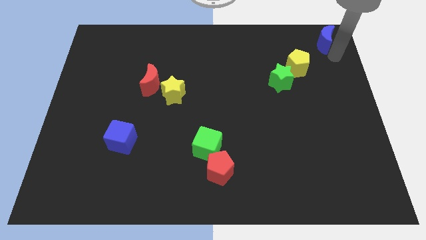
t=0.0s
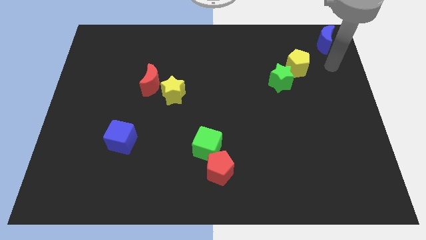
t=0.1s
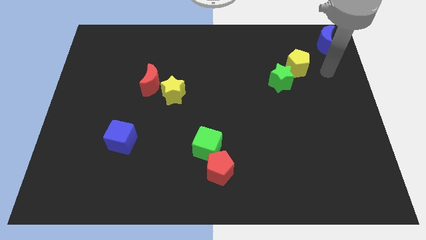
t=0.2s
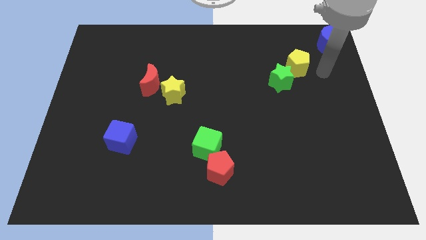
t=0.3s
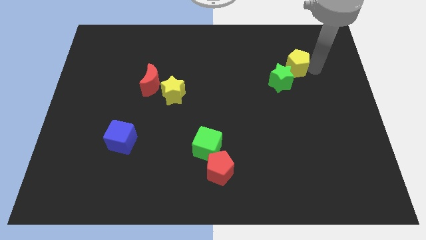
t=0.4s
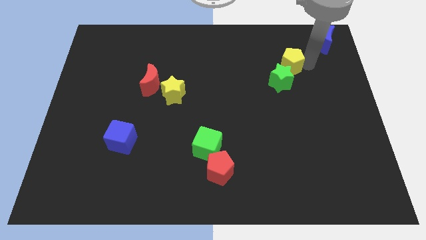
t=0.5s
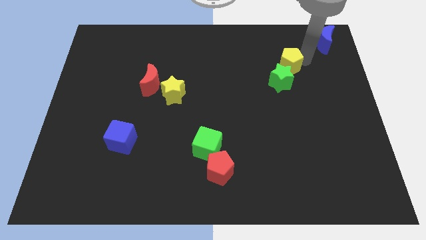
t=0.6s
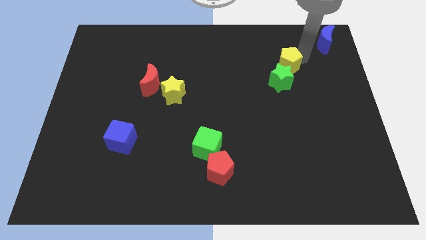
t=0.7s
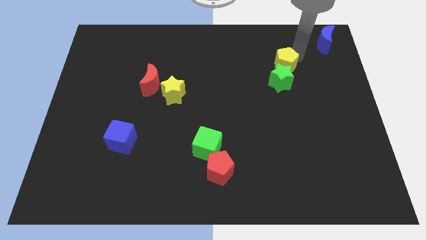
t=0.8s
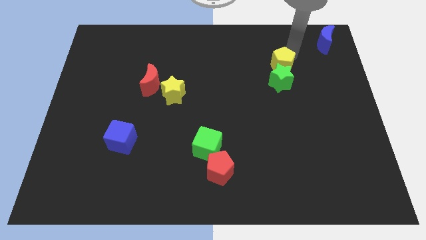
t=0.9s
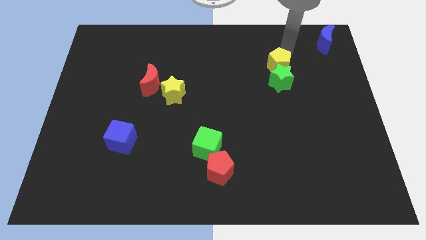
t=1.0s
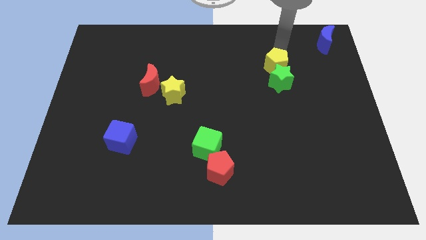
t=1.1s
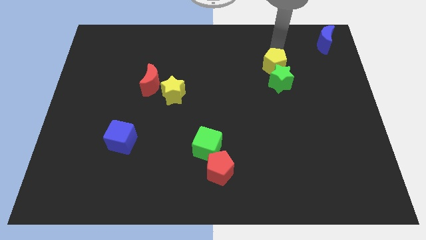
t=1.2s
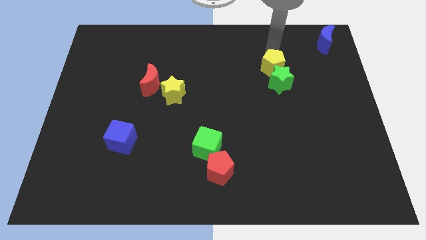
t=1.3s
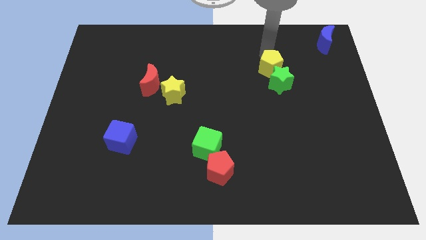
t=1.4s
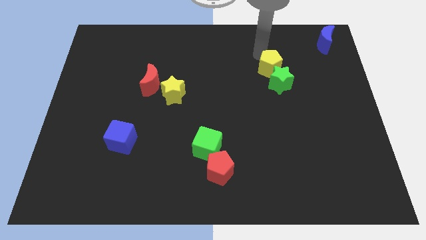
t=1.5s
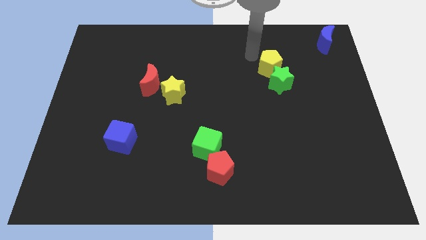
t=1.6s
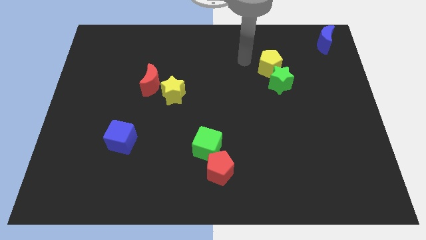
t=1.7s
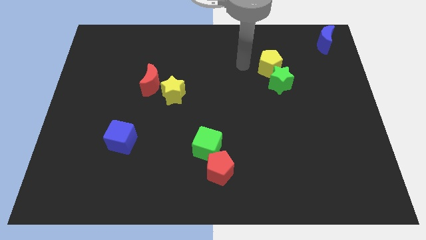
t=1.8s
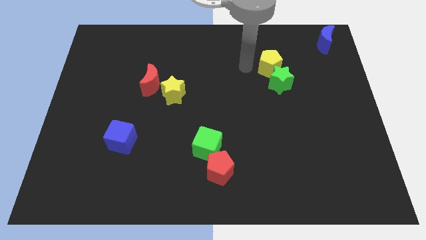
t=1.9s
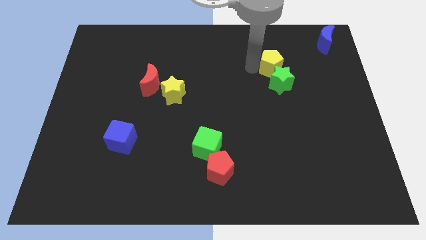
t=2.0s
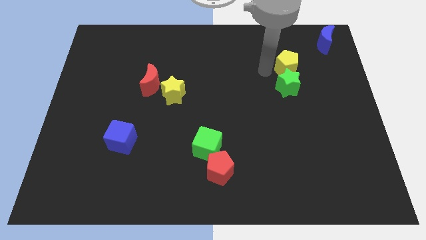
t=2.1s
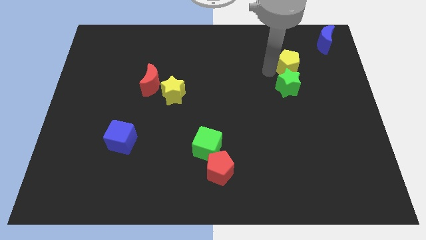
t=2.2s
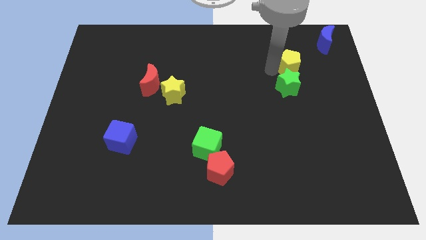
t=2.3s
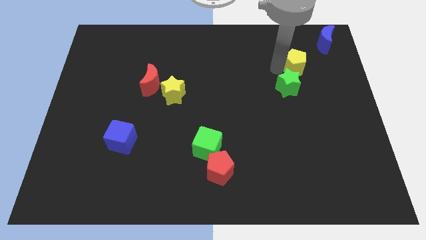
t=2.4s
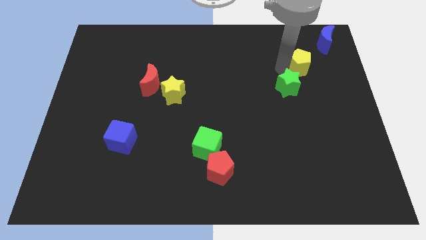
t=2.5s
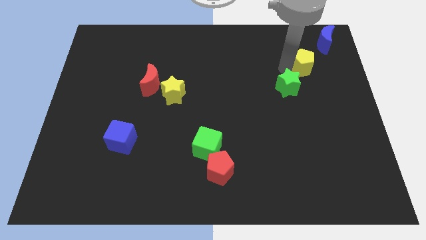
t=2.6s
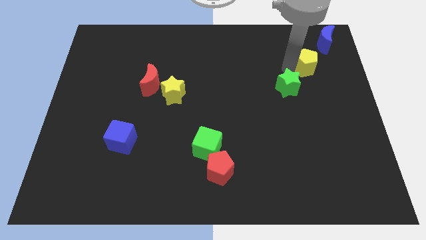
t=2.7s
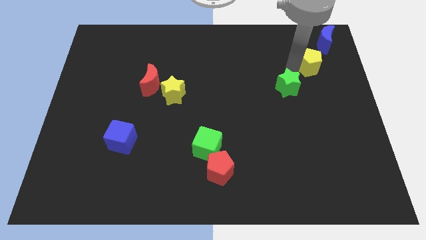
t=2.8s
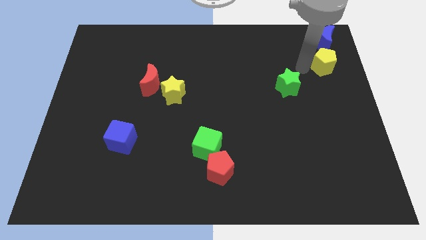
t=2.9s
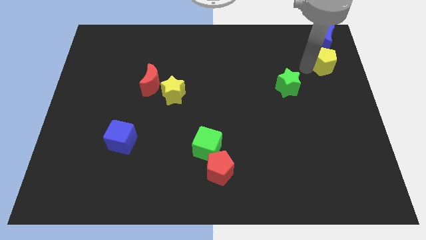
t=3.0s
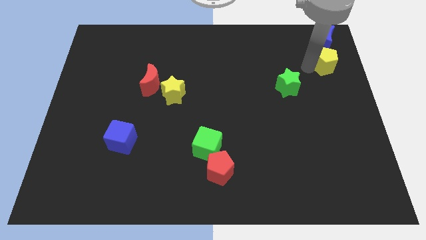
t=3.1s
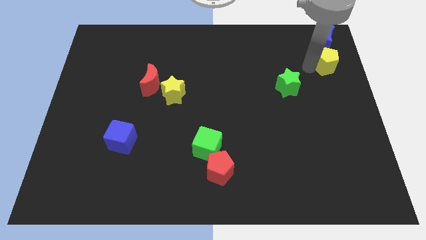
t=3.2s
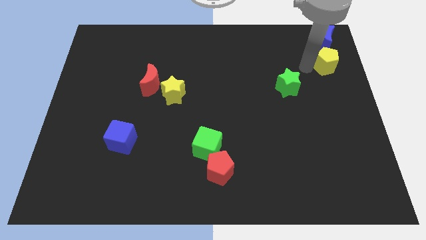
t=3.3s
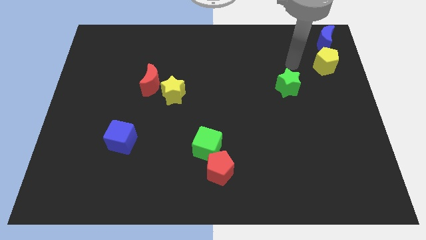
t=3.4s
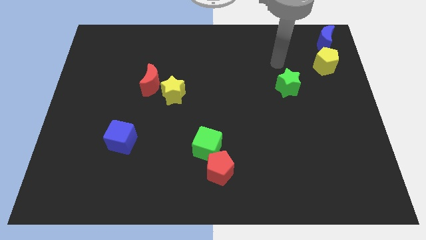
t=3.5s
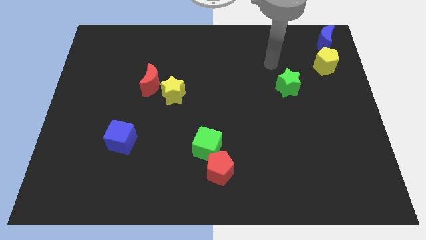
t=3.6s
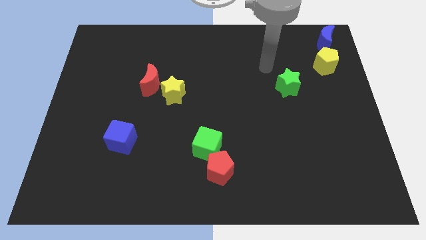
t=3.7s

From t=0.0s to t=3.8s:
adjust the yellow pentagon to the center of the blue crescent and green star

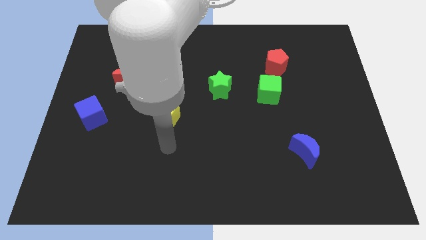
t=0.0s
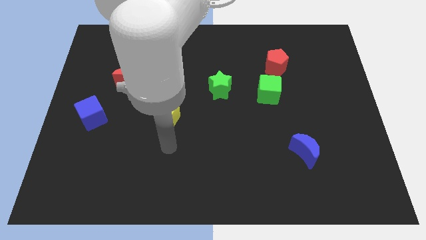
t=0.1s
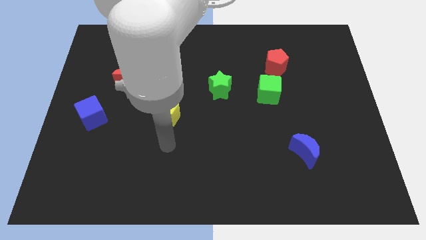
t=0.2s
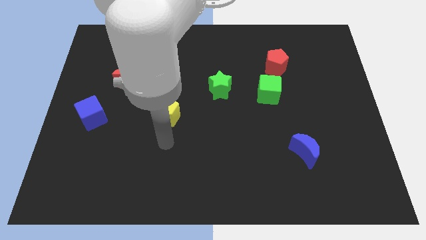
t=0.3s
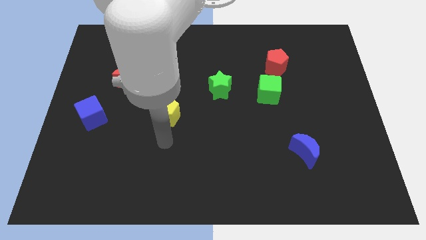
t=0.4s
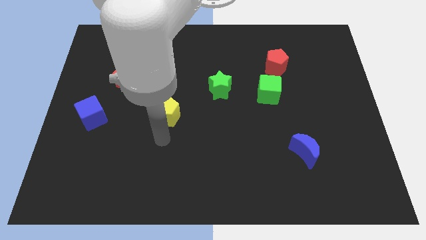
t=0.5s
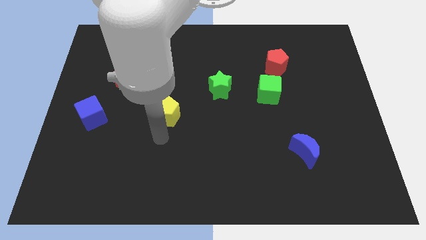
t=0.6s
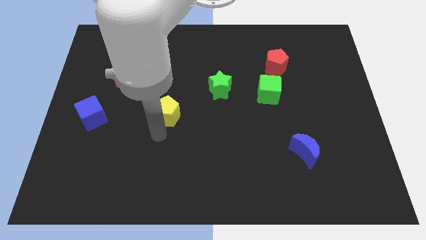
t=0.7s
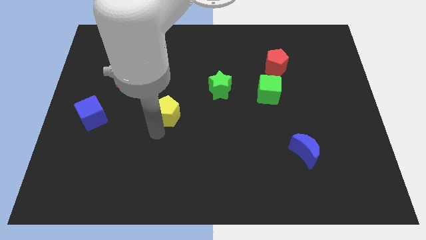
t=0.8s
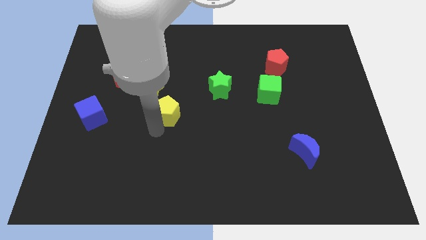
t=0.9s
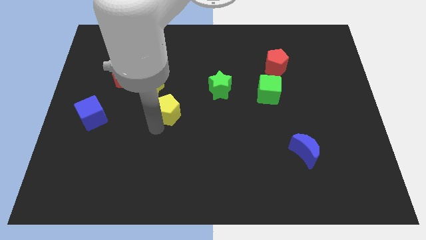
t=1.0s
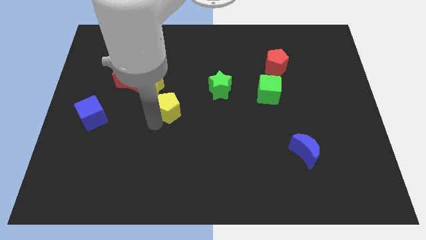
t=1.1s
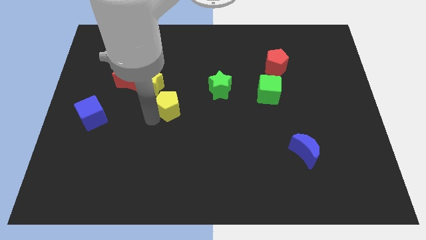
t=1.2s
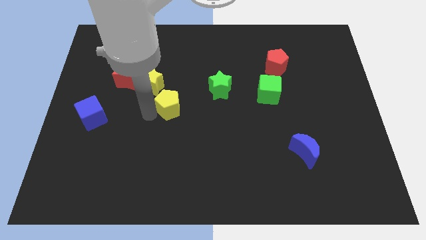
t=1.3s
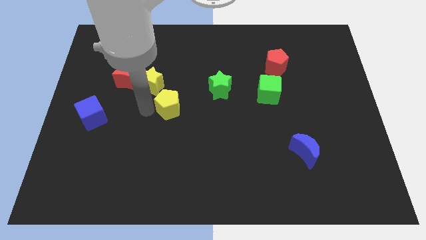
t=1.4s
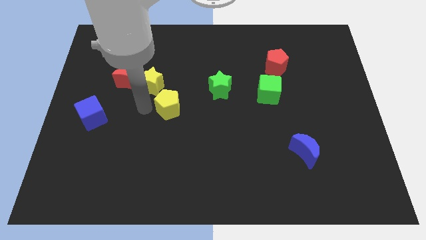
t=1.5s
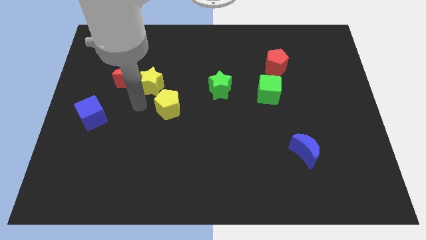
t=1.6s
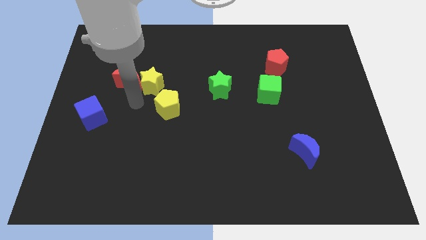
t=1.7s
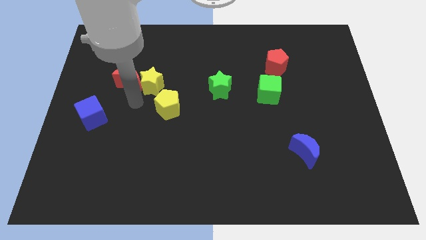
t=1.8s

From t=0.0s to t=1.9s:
tap the yellow pentagon

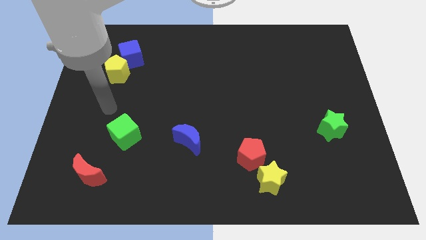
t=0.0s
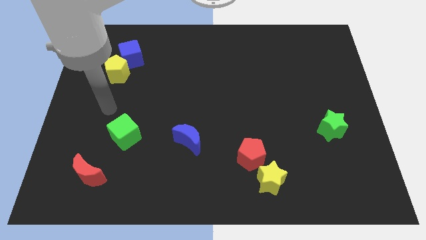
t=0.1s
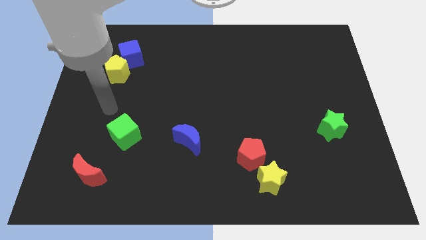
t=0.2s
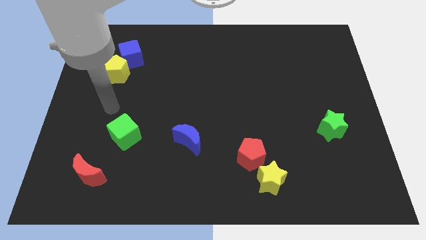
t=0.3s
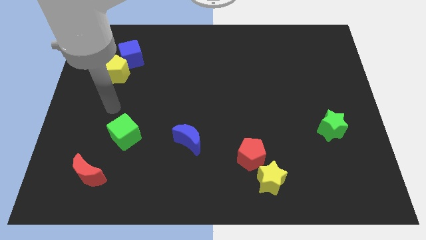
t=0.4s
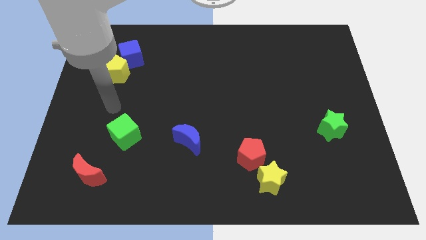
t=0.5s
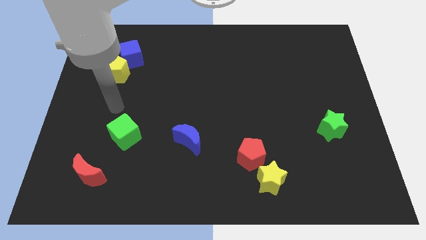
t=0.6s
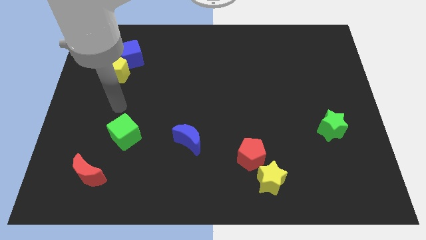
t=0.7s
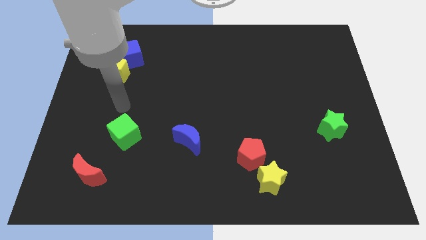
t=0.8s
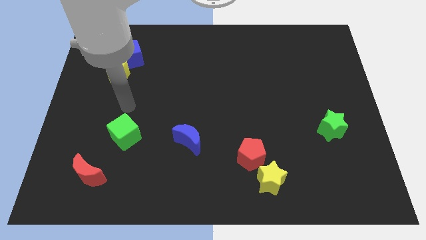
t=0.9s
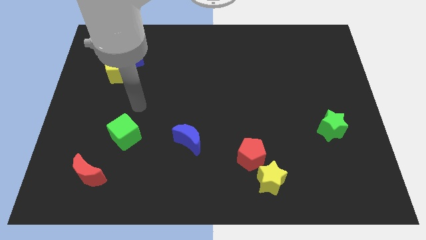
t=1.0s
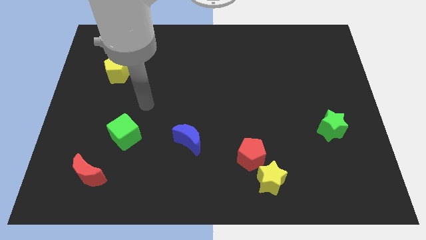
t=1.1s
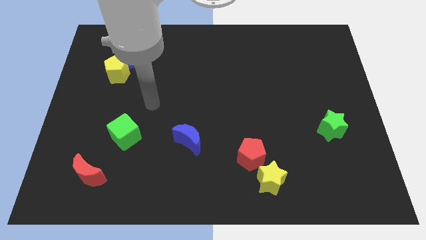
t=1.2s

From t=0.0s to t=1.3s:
move your arm towards the top of the green cube

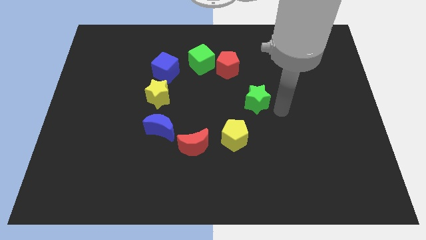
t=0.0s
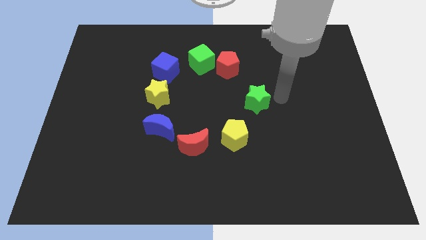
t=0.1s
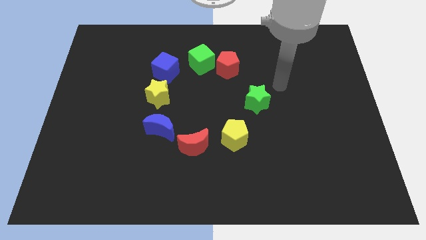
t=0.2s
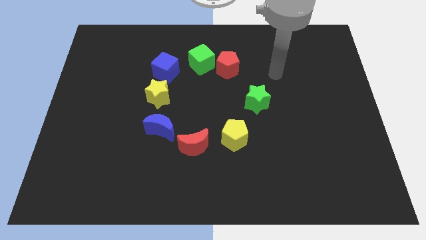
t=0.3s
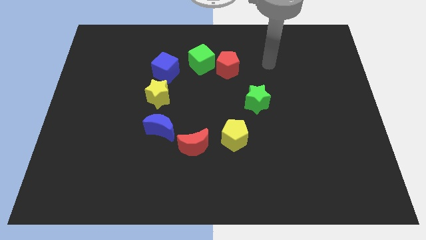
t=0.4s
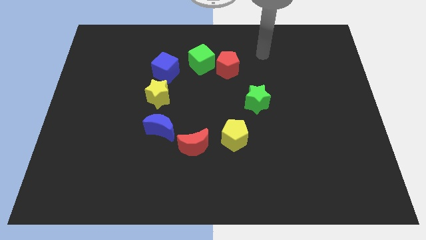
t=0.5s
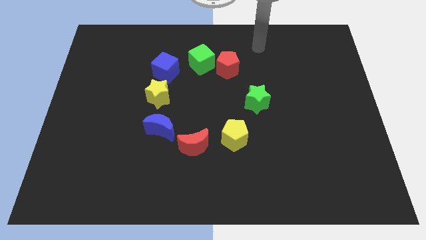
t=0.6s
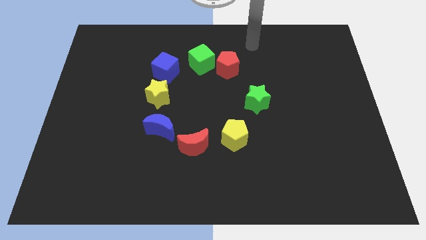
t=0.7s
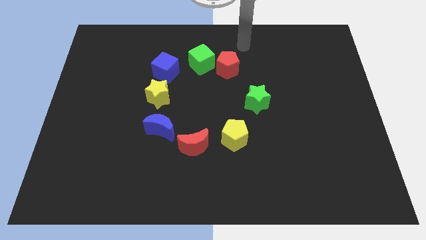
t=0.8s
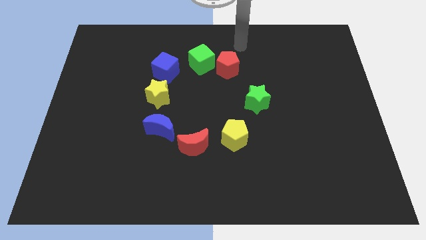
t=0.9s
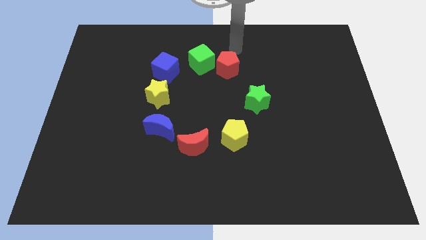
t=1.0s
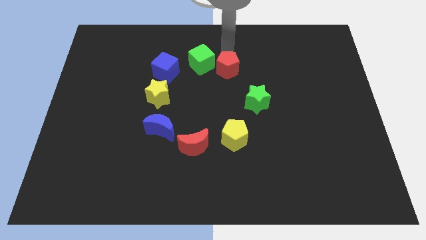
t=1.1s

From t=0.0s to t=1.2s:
move the arm towards the top right of the red pentagon

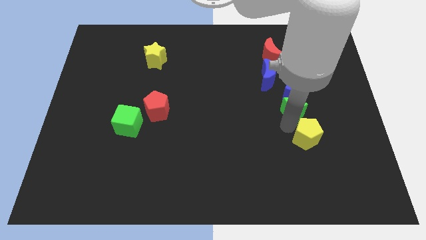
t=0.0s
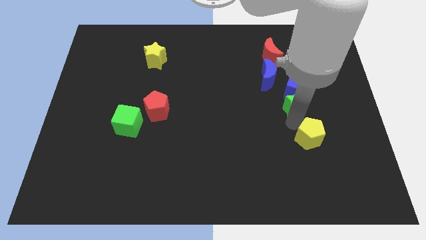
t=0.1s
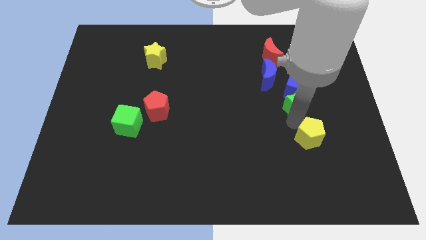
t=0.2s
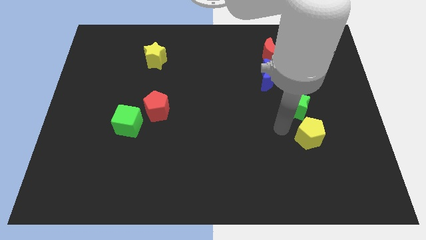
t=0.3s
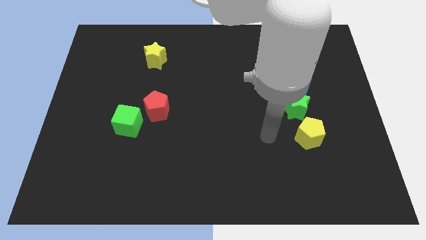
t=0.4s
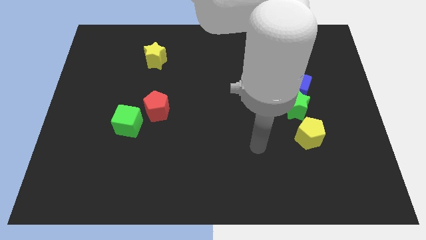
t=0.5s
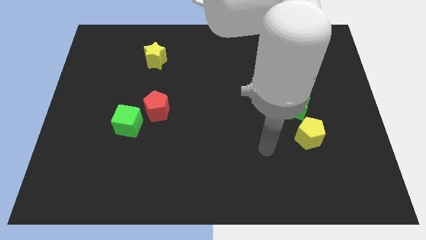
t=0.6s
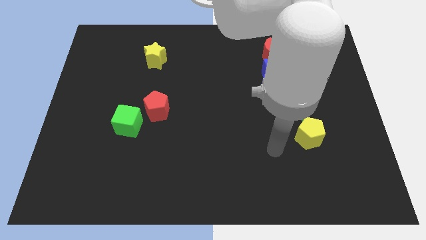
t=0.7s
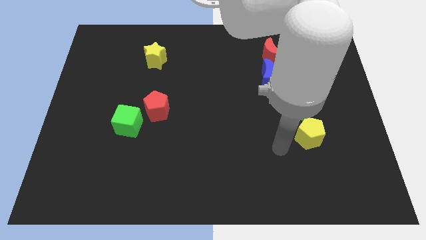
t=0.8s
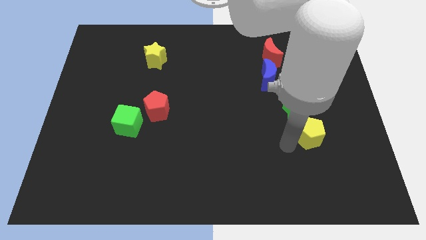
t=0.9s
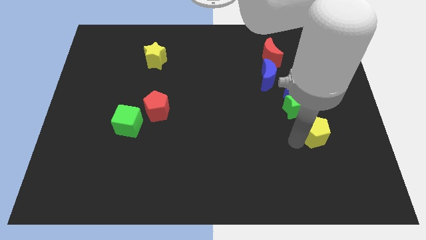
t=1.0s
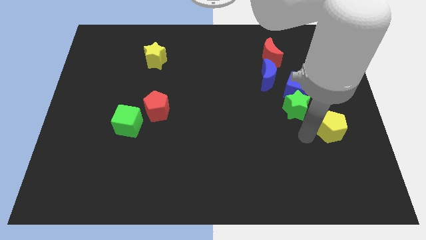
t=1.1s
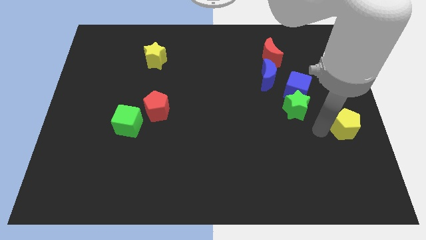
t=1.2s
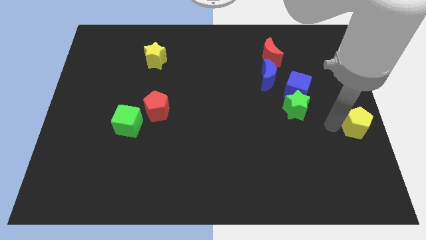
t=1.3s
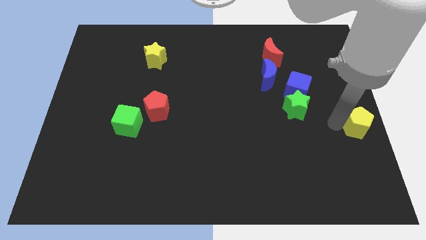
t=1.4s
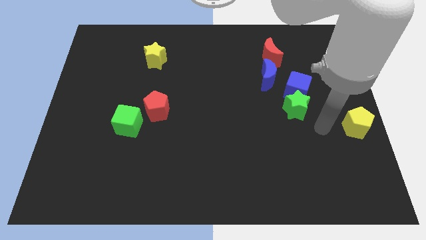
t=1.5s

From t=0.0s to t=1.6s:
separate the yellow pentagon to the right side
